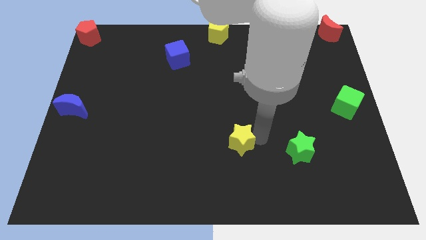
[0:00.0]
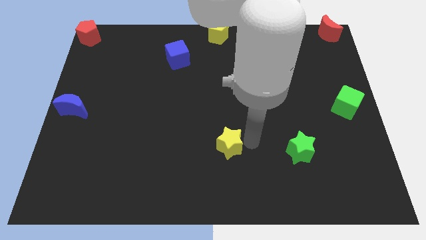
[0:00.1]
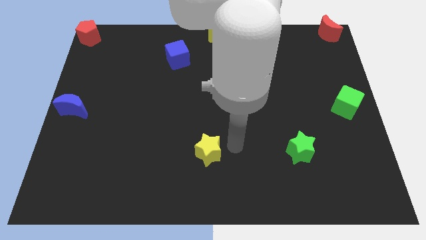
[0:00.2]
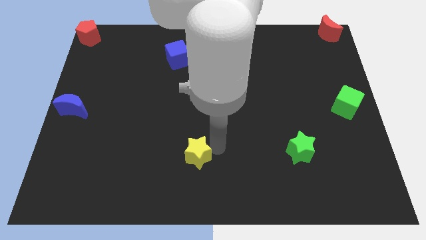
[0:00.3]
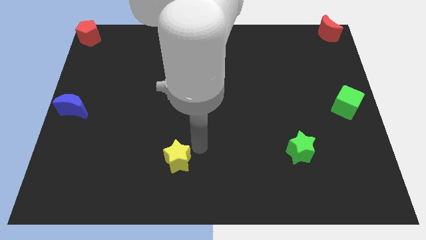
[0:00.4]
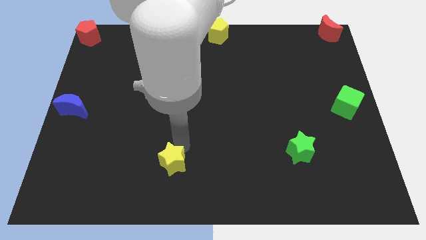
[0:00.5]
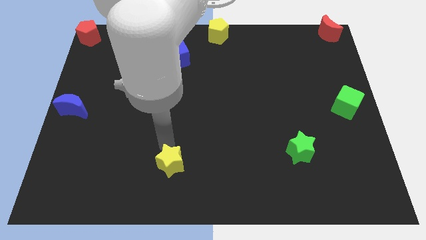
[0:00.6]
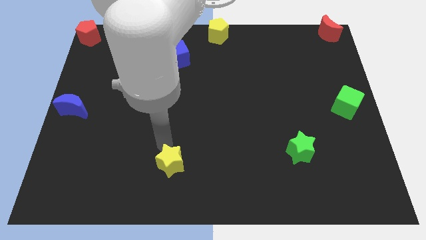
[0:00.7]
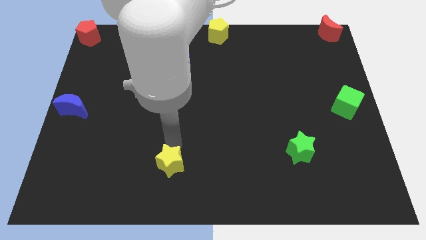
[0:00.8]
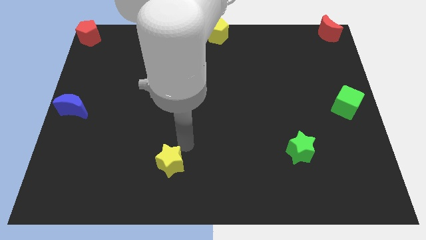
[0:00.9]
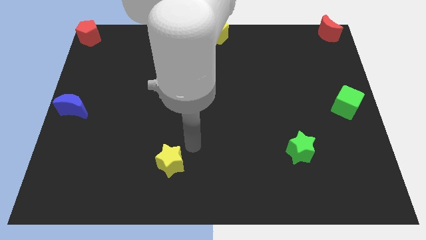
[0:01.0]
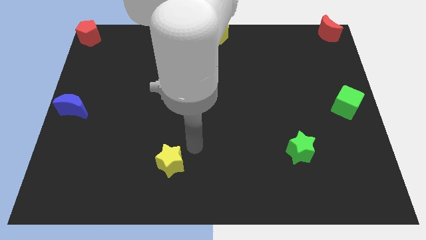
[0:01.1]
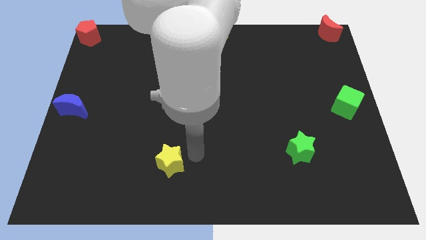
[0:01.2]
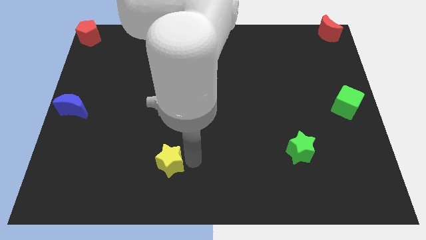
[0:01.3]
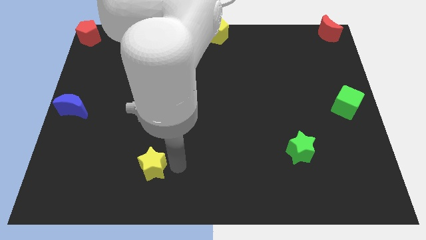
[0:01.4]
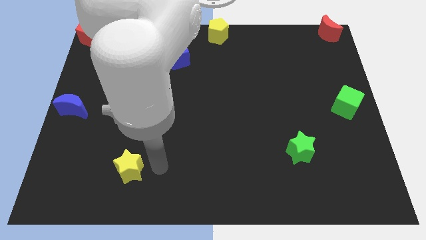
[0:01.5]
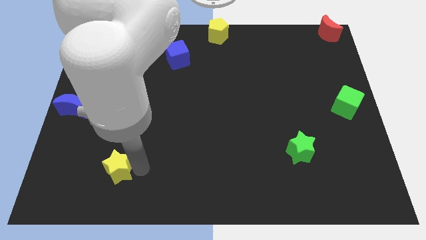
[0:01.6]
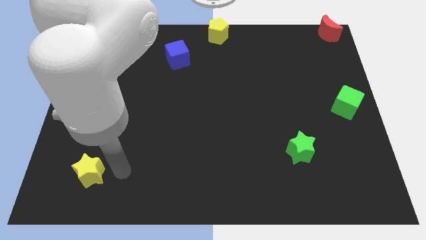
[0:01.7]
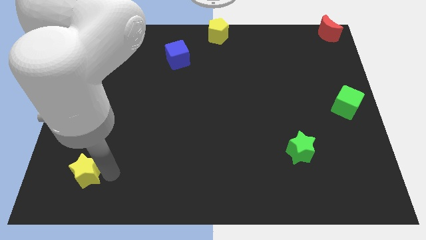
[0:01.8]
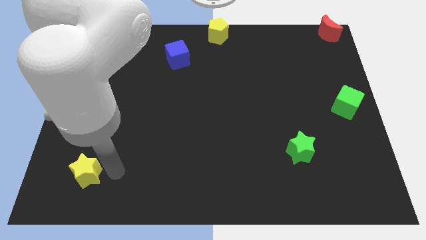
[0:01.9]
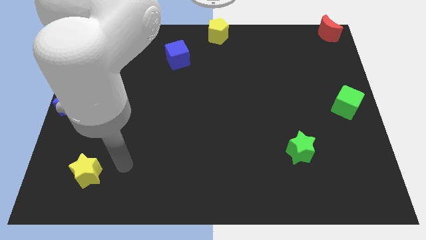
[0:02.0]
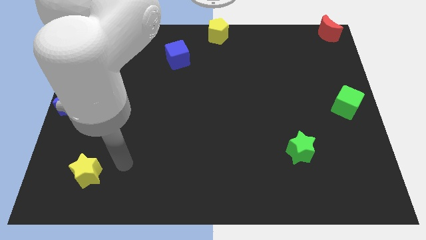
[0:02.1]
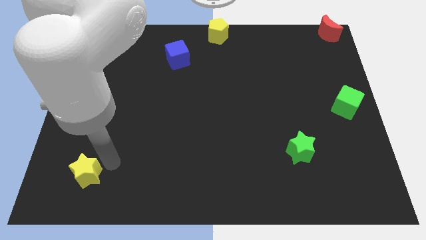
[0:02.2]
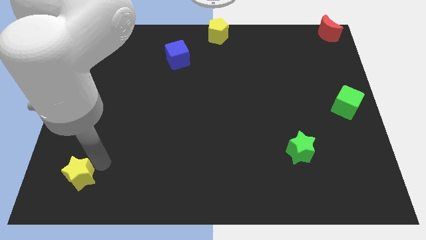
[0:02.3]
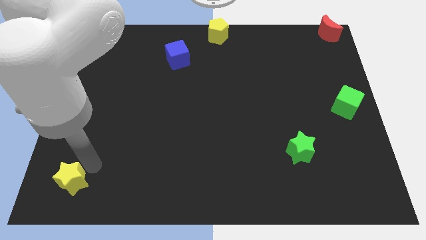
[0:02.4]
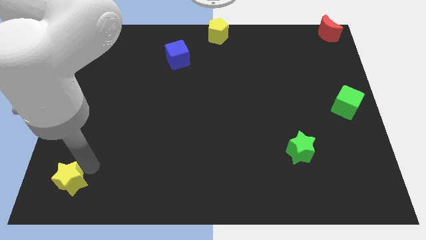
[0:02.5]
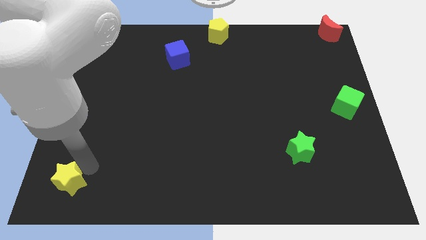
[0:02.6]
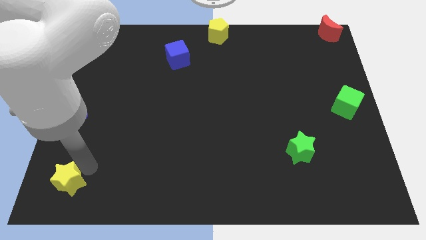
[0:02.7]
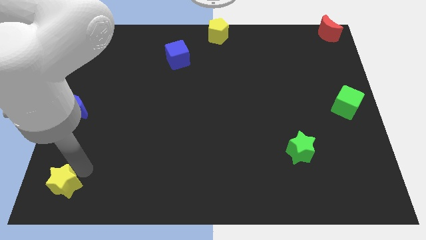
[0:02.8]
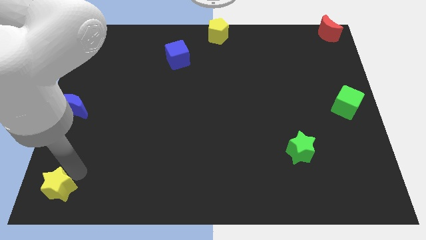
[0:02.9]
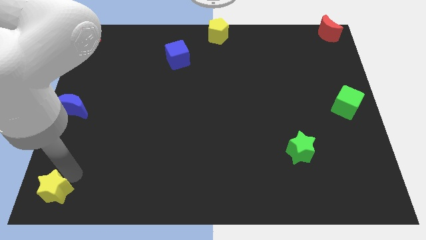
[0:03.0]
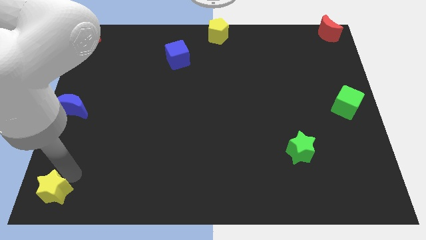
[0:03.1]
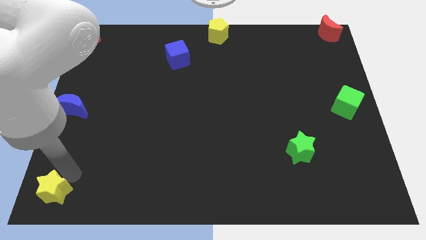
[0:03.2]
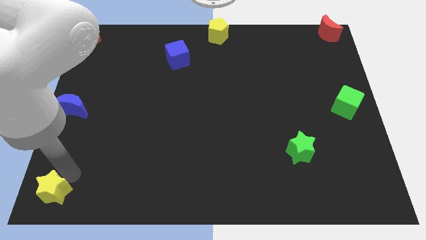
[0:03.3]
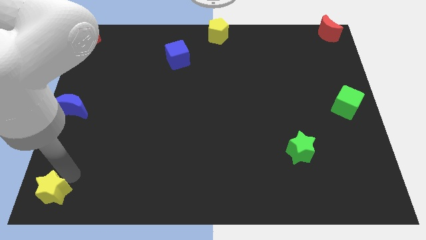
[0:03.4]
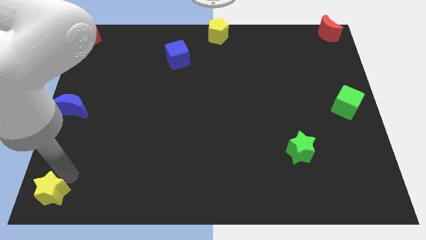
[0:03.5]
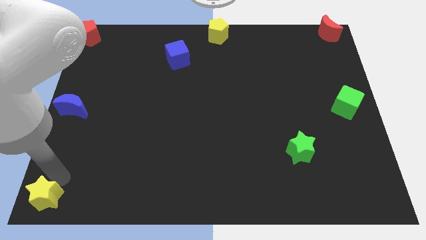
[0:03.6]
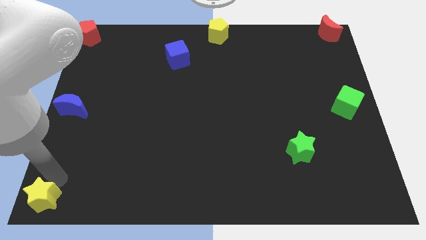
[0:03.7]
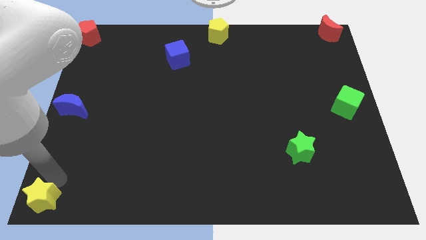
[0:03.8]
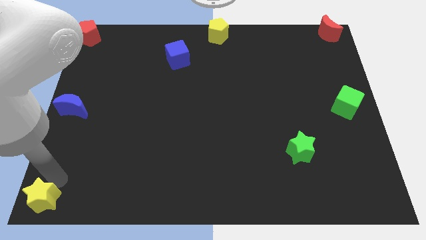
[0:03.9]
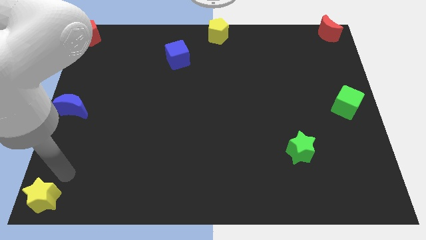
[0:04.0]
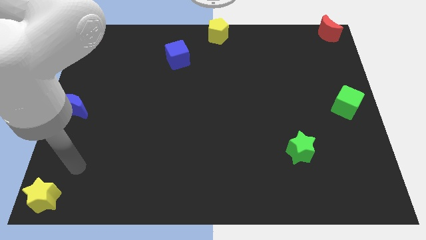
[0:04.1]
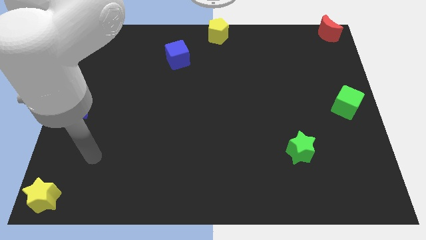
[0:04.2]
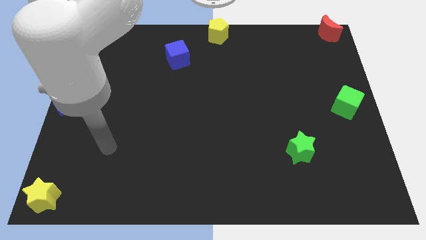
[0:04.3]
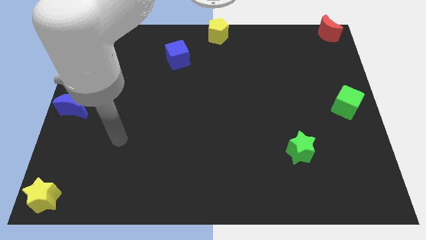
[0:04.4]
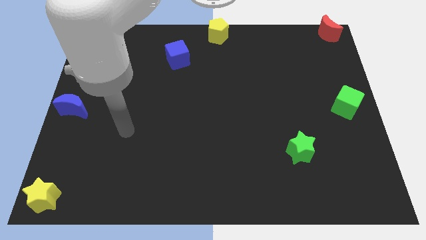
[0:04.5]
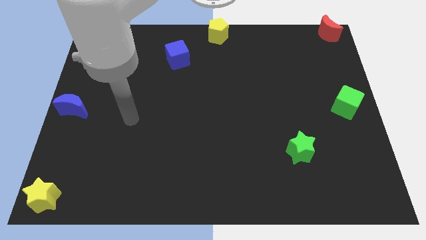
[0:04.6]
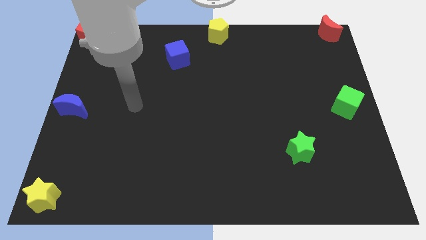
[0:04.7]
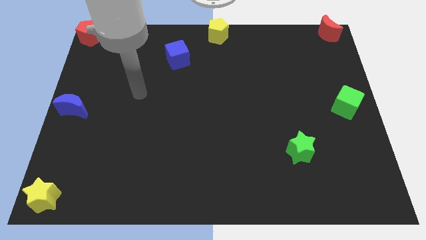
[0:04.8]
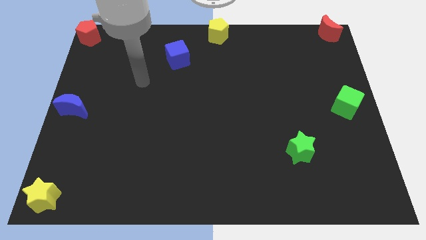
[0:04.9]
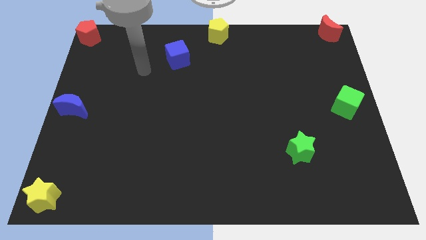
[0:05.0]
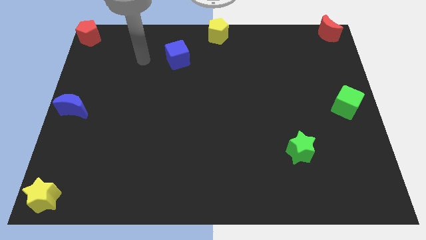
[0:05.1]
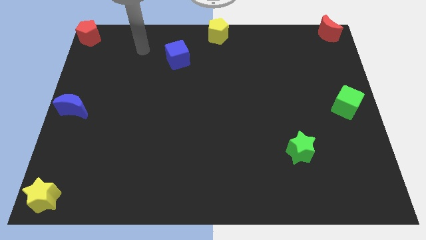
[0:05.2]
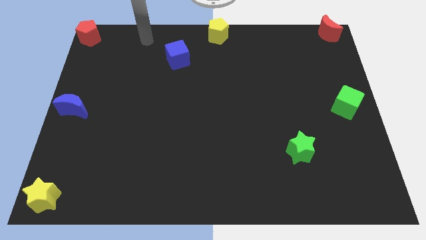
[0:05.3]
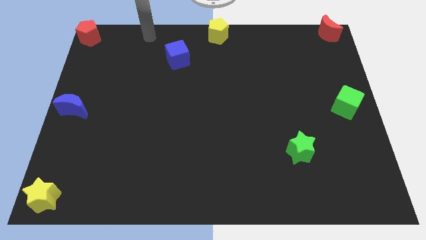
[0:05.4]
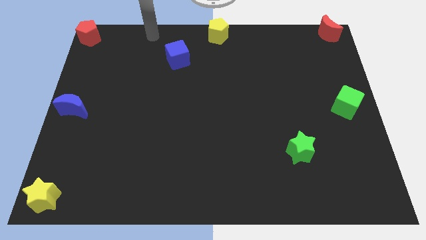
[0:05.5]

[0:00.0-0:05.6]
place the yellow star on the bottom left of the board

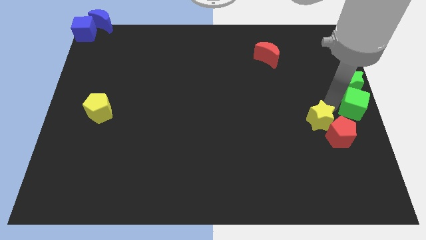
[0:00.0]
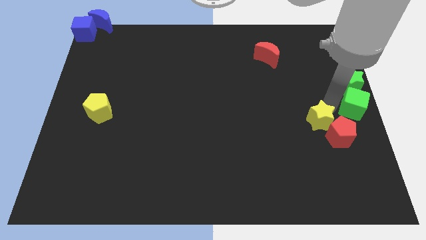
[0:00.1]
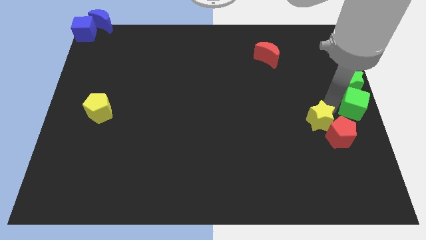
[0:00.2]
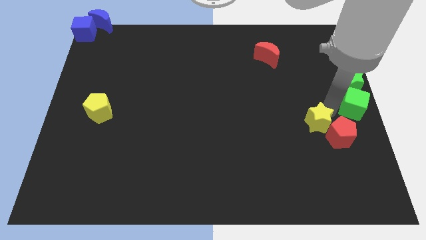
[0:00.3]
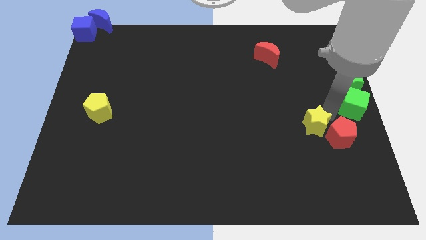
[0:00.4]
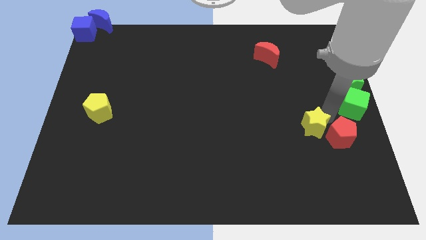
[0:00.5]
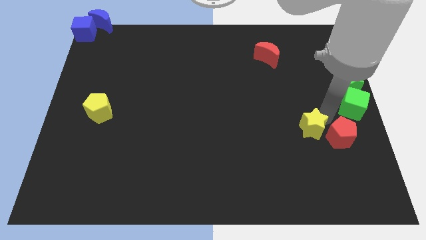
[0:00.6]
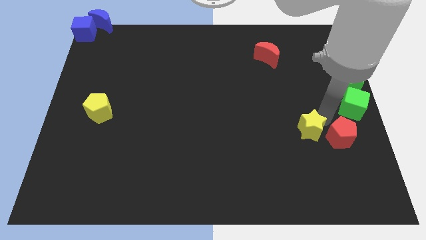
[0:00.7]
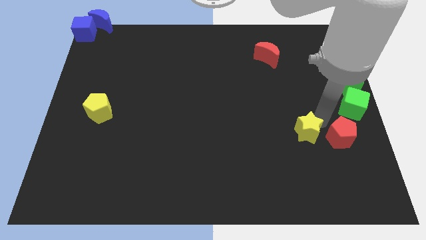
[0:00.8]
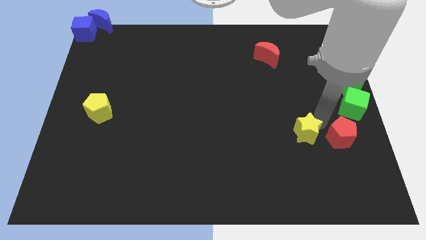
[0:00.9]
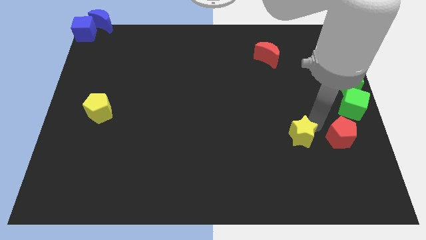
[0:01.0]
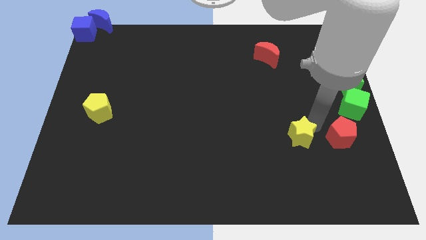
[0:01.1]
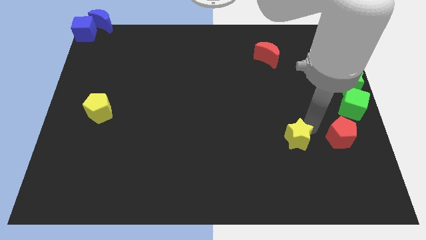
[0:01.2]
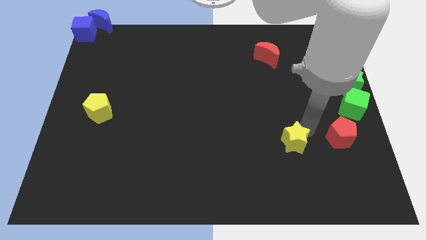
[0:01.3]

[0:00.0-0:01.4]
move the yellow star to the left of red pentagon

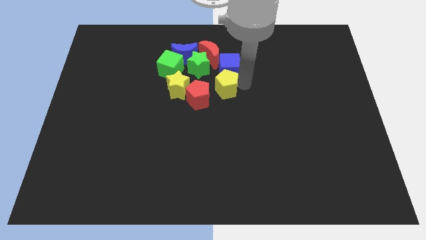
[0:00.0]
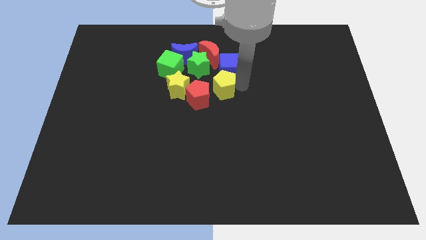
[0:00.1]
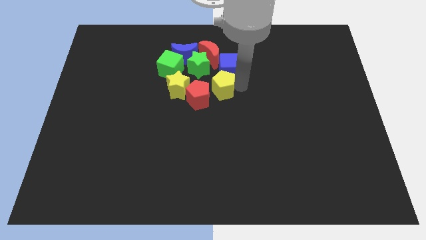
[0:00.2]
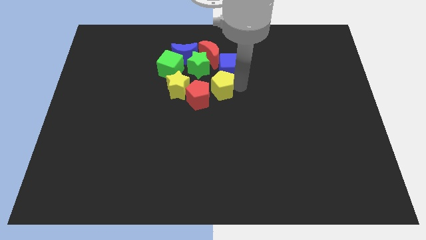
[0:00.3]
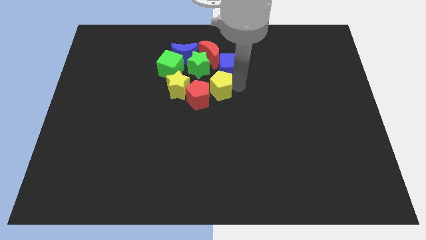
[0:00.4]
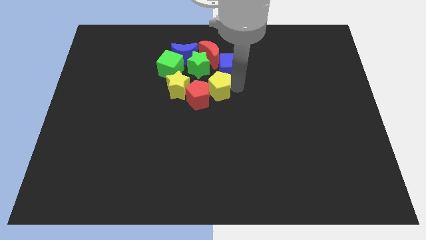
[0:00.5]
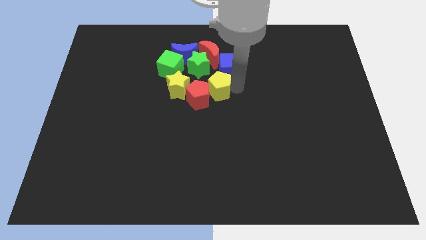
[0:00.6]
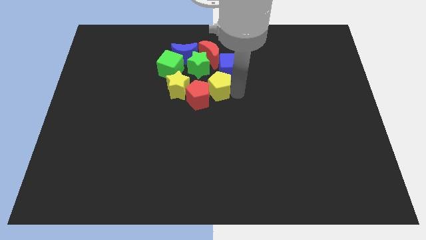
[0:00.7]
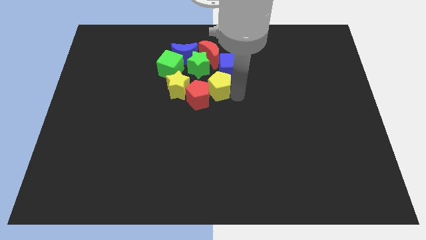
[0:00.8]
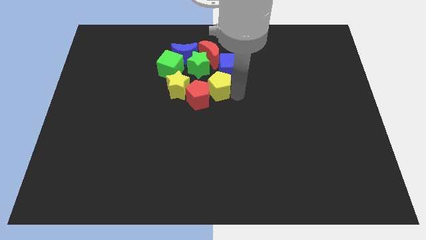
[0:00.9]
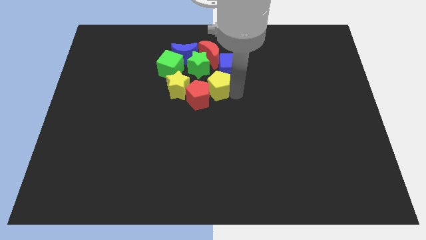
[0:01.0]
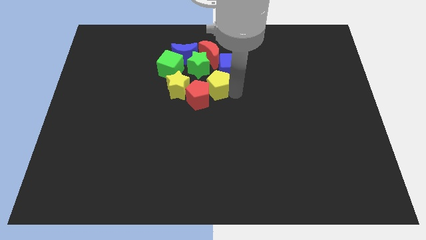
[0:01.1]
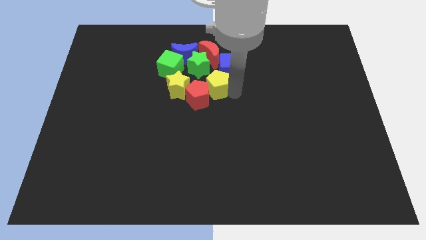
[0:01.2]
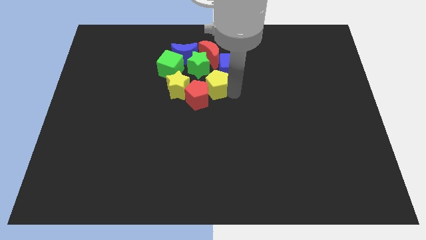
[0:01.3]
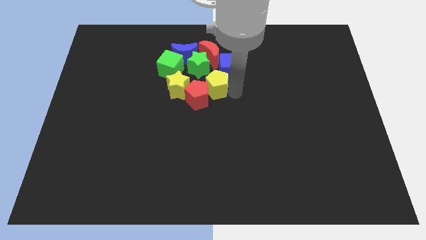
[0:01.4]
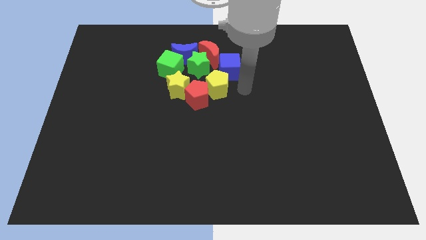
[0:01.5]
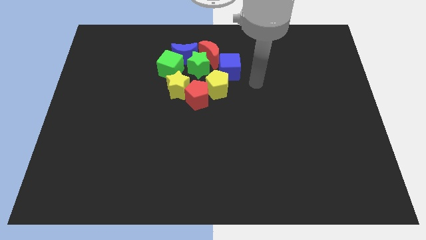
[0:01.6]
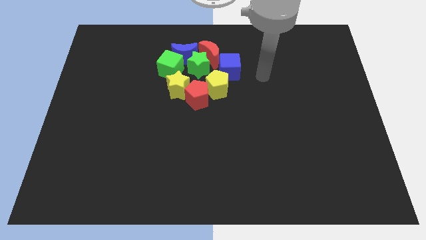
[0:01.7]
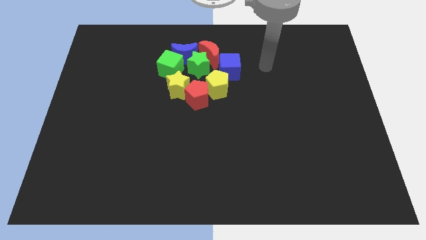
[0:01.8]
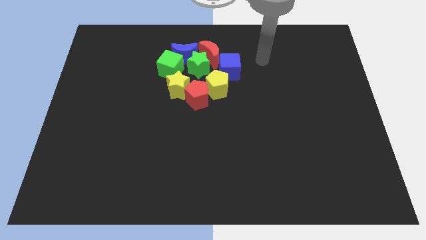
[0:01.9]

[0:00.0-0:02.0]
place yellow pentagon between the blue cube and red pentagon
